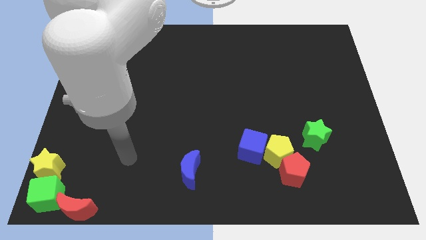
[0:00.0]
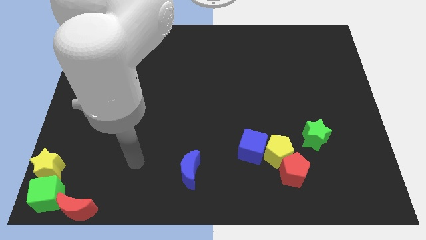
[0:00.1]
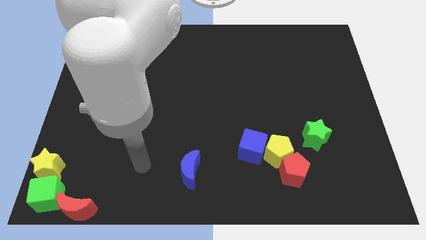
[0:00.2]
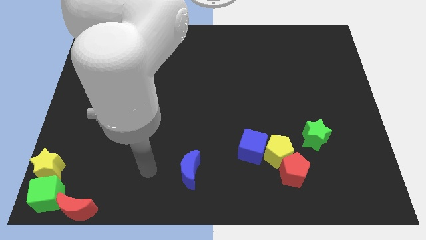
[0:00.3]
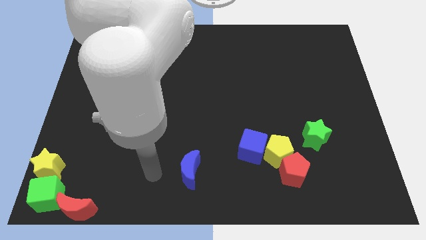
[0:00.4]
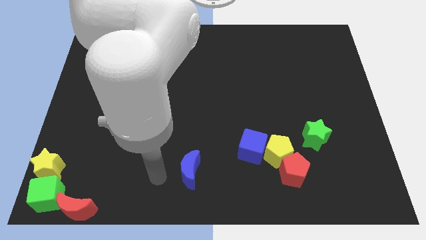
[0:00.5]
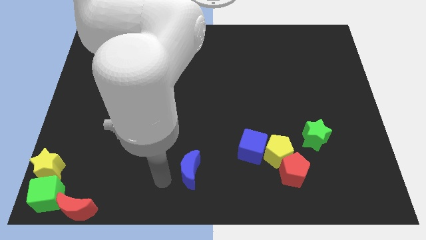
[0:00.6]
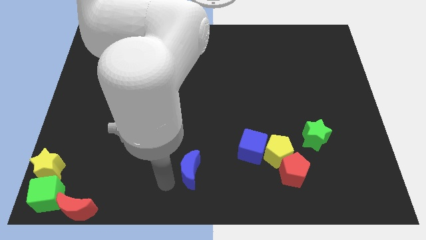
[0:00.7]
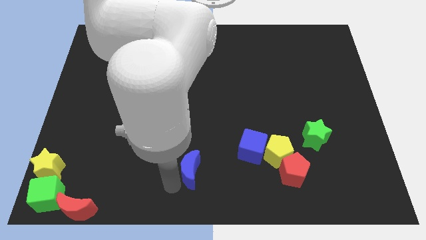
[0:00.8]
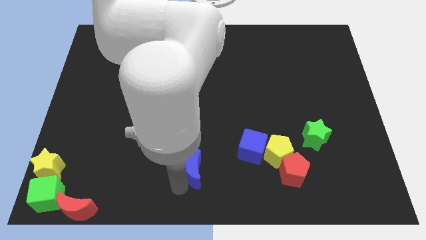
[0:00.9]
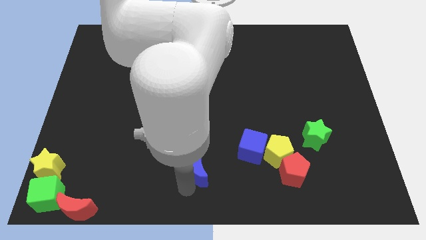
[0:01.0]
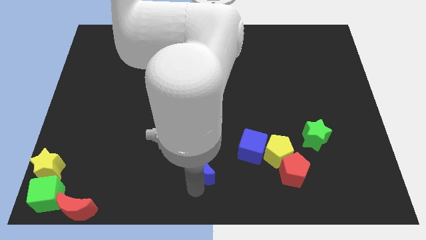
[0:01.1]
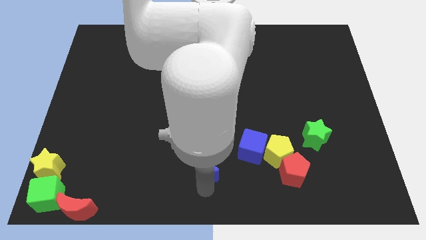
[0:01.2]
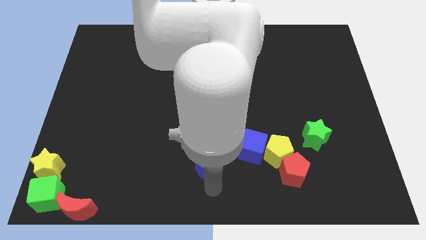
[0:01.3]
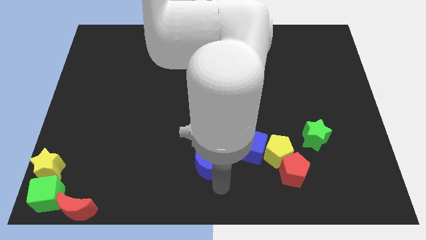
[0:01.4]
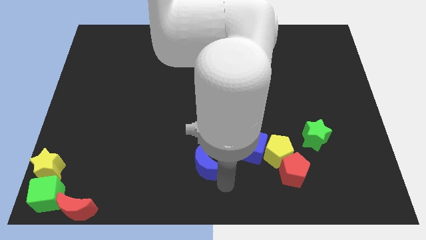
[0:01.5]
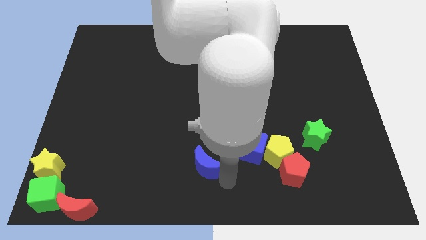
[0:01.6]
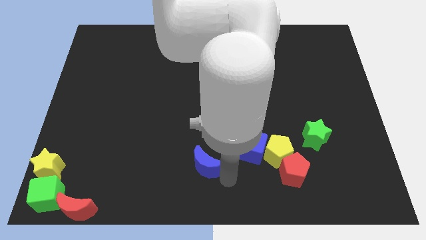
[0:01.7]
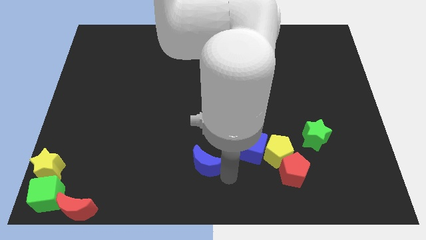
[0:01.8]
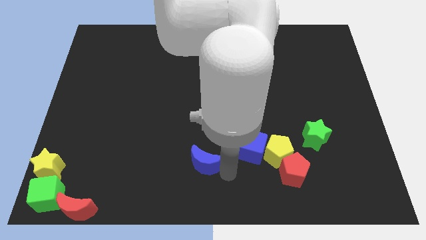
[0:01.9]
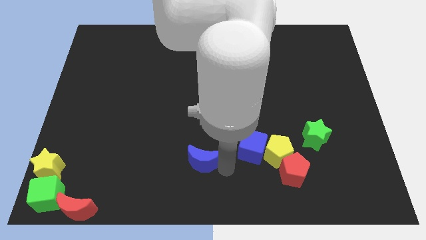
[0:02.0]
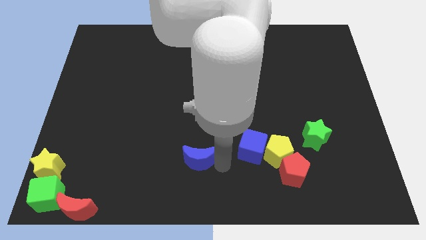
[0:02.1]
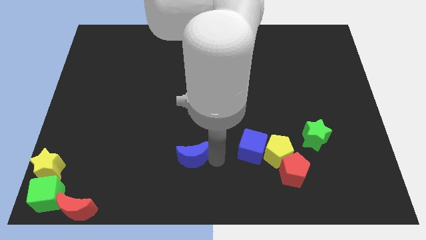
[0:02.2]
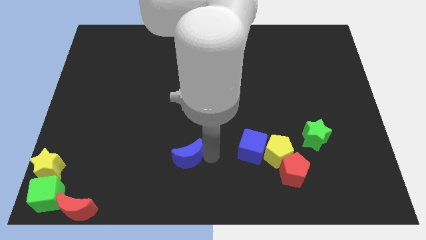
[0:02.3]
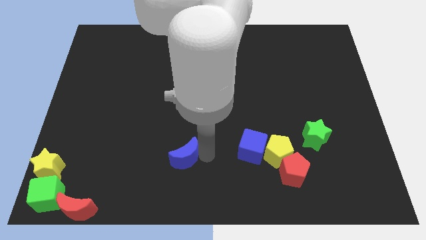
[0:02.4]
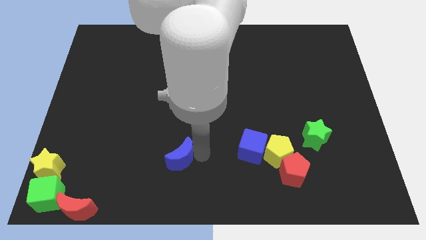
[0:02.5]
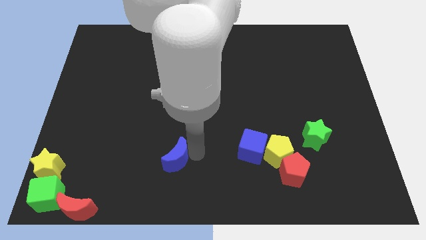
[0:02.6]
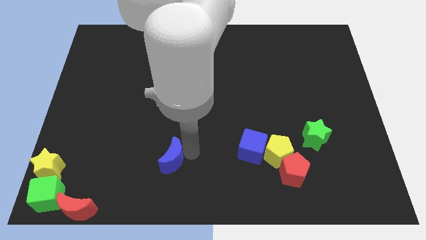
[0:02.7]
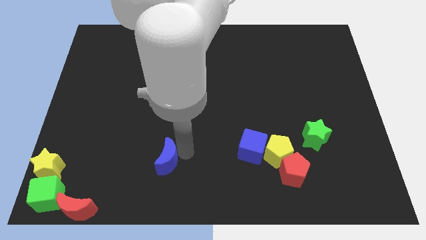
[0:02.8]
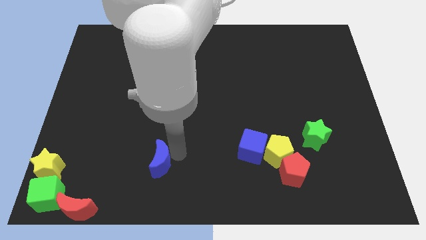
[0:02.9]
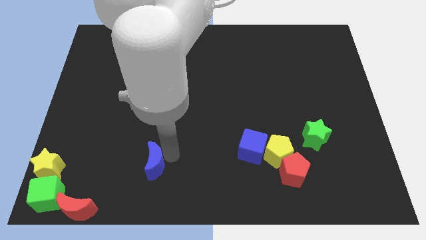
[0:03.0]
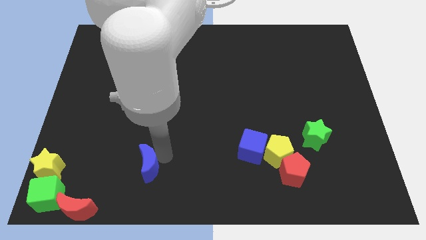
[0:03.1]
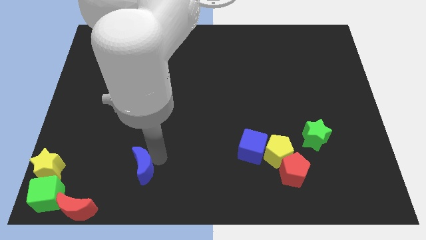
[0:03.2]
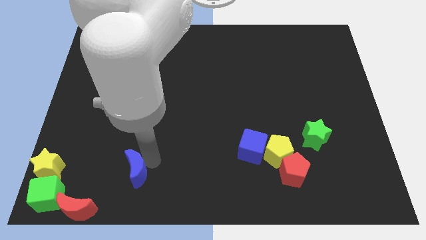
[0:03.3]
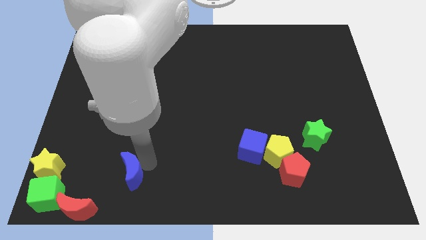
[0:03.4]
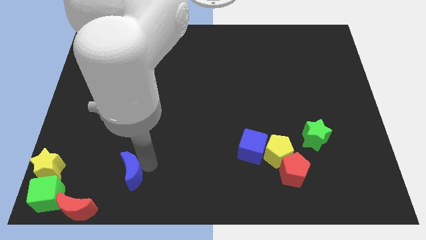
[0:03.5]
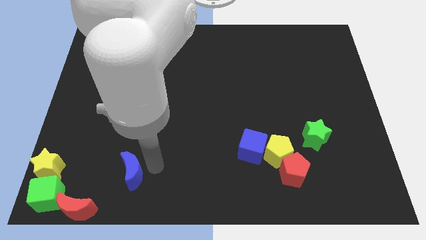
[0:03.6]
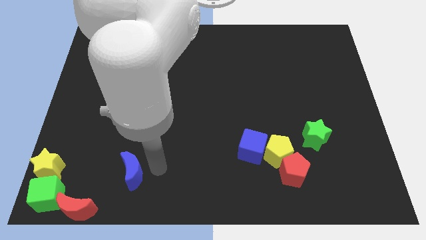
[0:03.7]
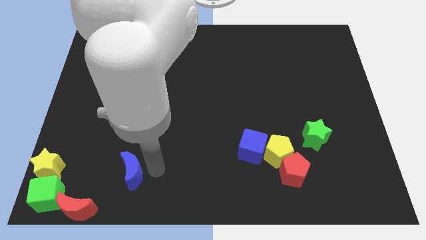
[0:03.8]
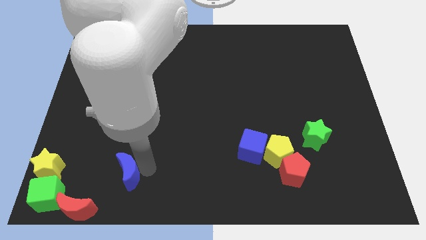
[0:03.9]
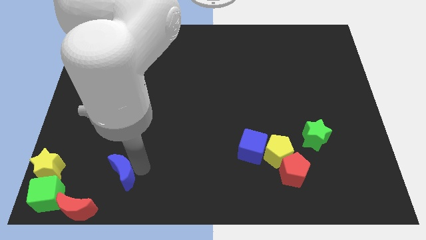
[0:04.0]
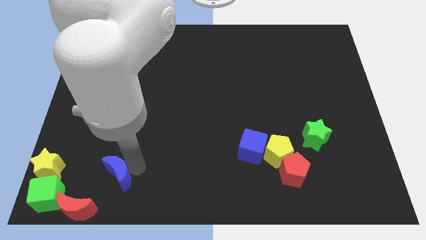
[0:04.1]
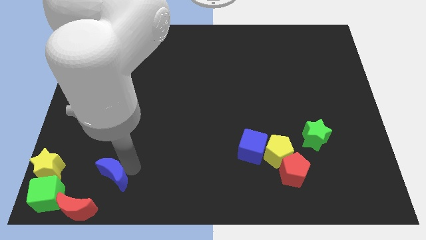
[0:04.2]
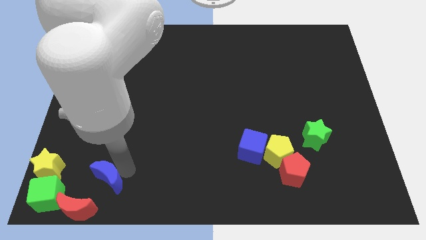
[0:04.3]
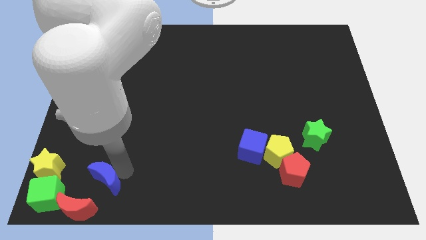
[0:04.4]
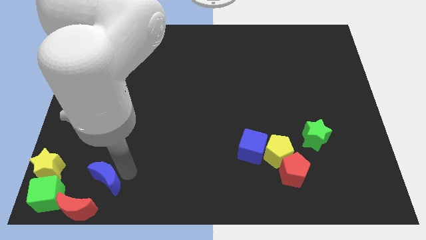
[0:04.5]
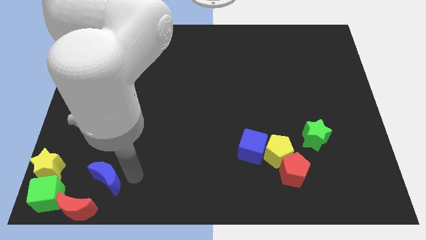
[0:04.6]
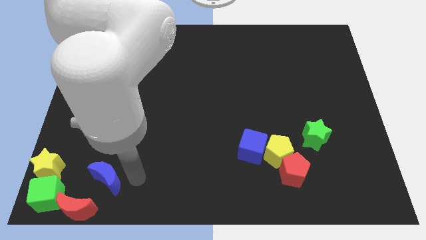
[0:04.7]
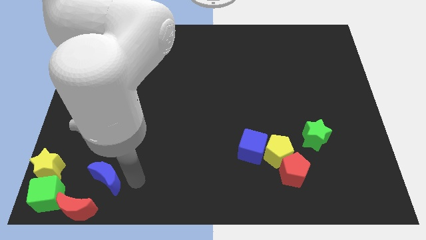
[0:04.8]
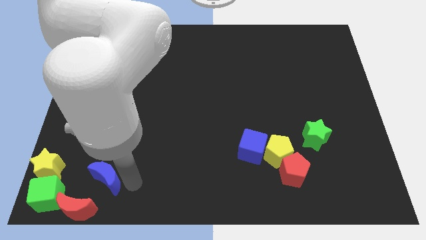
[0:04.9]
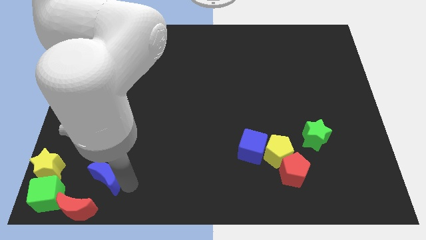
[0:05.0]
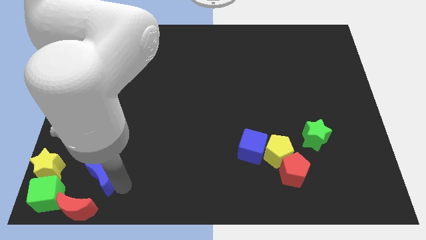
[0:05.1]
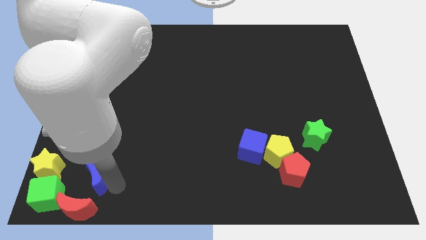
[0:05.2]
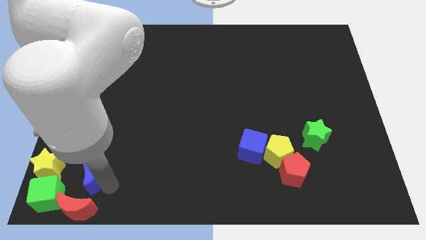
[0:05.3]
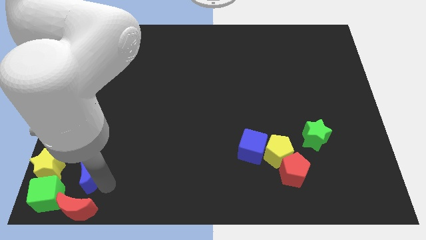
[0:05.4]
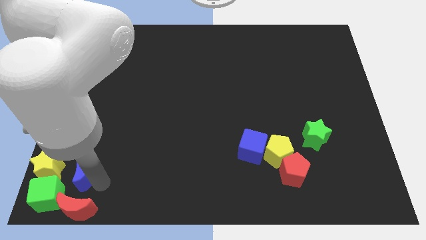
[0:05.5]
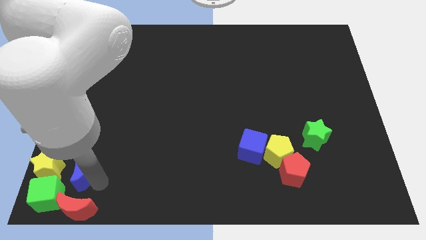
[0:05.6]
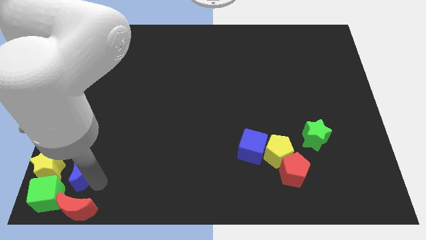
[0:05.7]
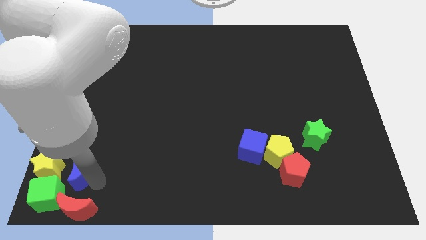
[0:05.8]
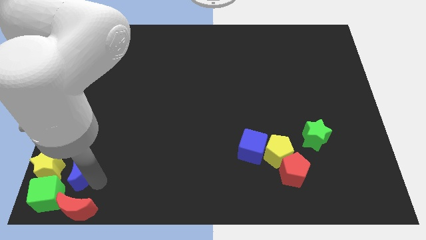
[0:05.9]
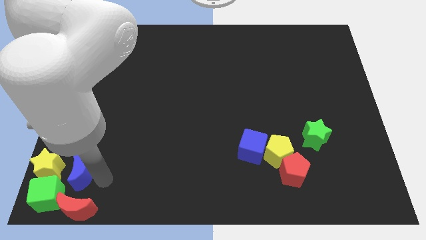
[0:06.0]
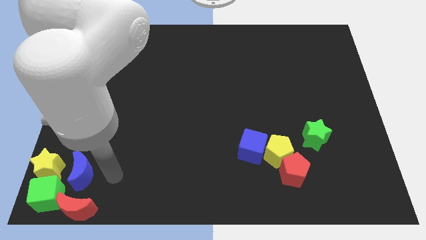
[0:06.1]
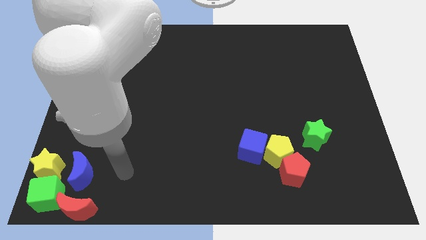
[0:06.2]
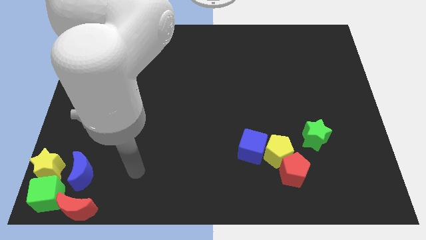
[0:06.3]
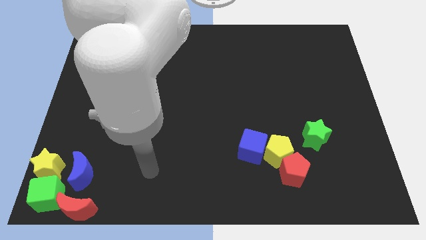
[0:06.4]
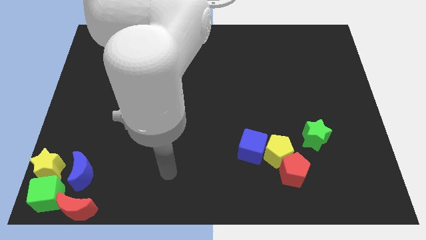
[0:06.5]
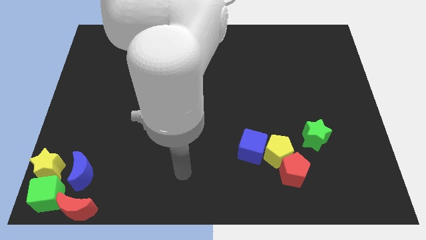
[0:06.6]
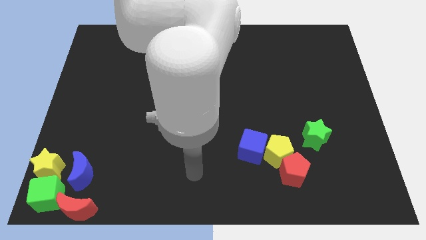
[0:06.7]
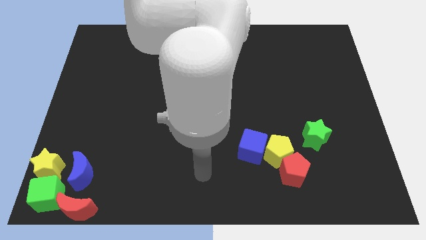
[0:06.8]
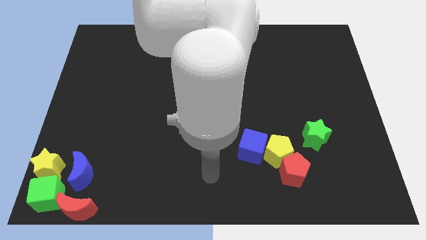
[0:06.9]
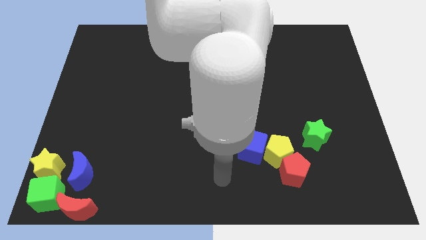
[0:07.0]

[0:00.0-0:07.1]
slide the blue crescent at the right side of yellow star

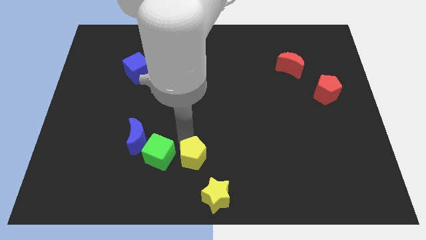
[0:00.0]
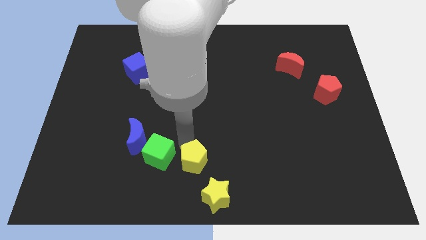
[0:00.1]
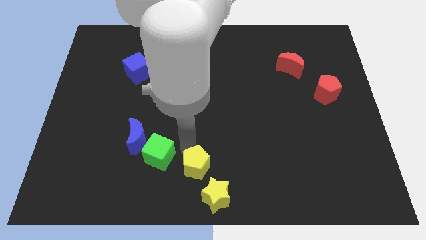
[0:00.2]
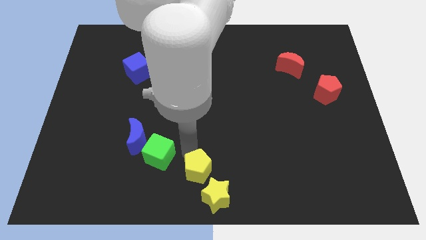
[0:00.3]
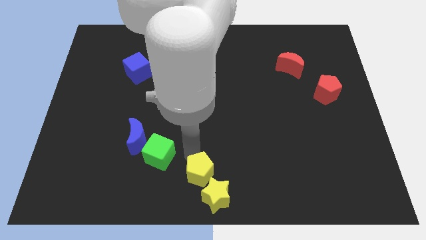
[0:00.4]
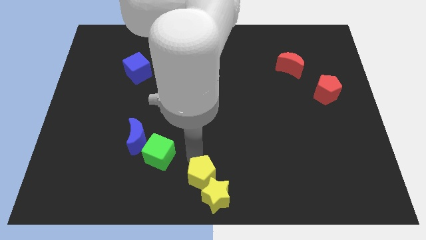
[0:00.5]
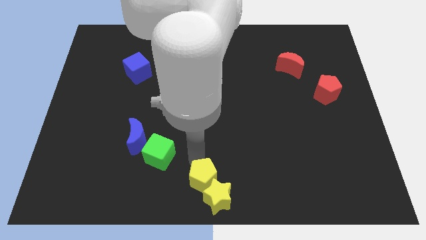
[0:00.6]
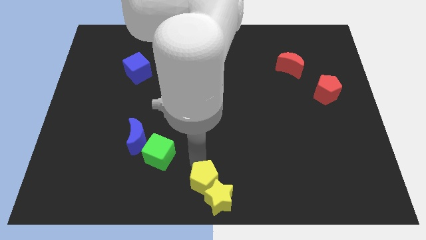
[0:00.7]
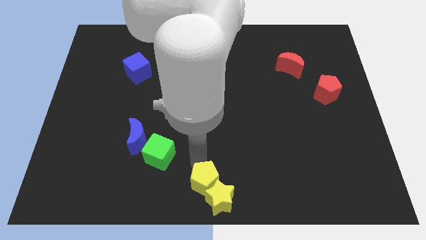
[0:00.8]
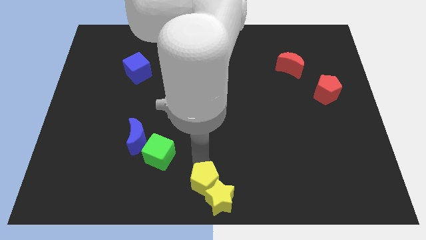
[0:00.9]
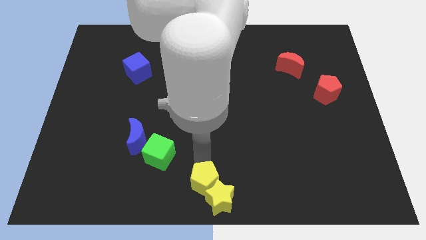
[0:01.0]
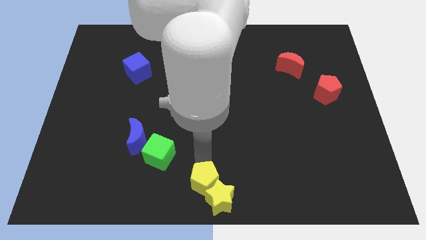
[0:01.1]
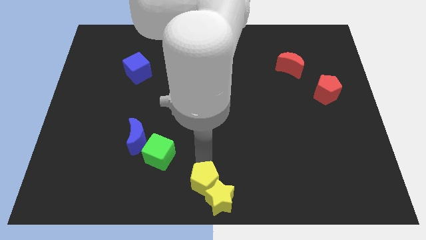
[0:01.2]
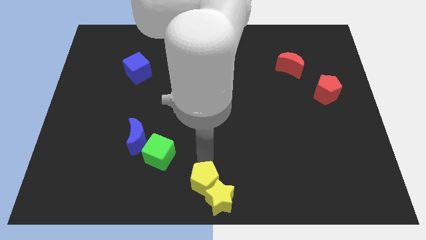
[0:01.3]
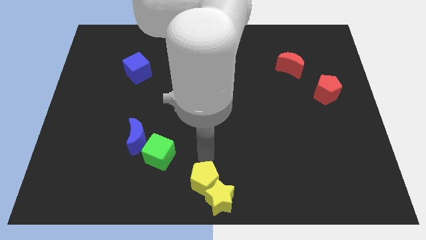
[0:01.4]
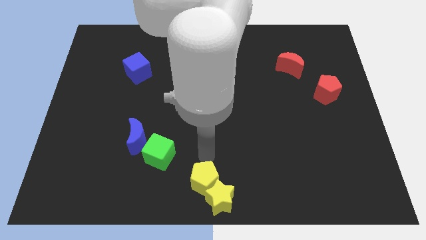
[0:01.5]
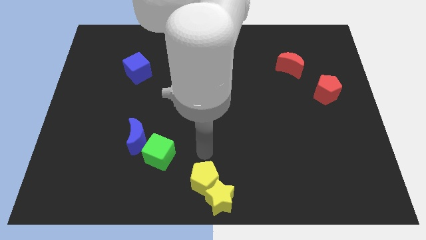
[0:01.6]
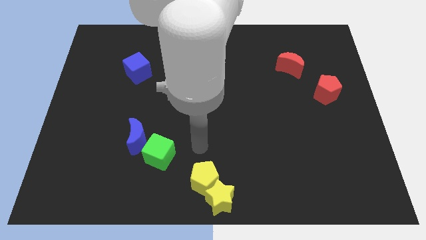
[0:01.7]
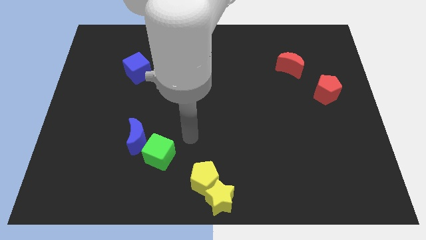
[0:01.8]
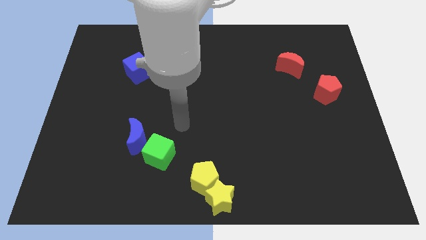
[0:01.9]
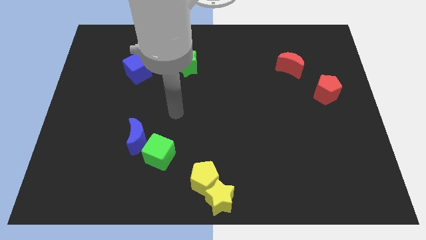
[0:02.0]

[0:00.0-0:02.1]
move the yellow pentagon towards the bottom center of the board
